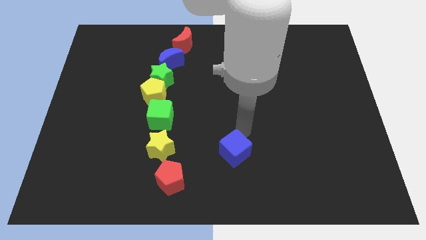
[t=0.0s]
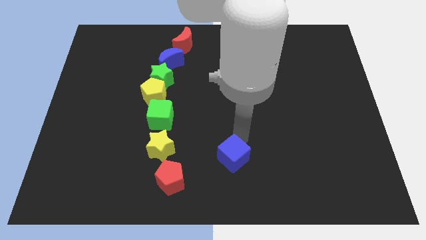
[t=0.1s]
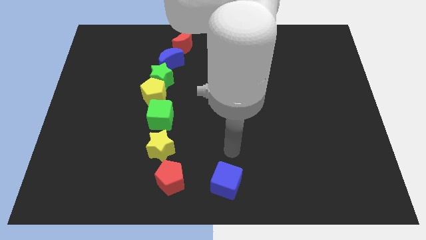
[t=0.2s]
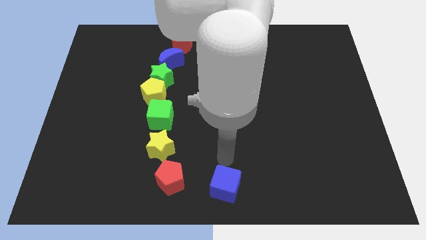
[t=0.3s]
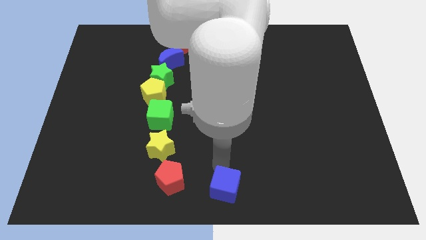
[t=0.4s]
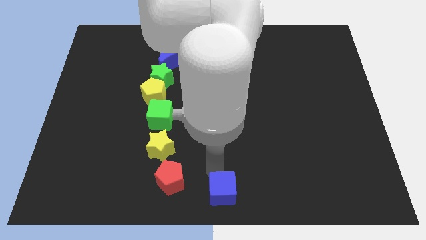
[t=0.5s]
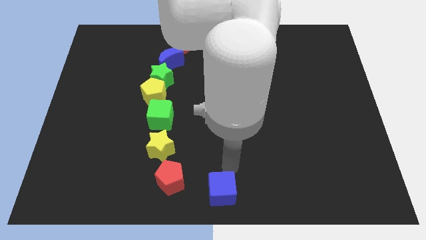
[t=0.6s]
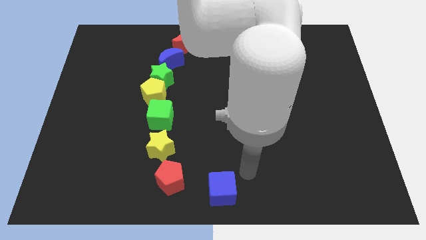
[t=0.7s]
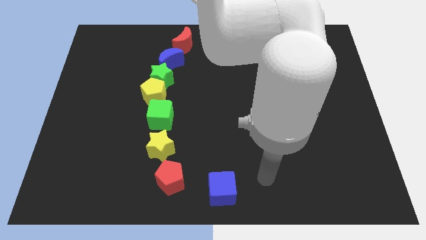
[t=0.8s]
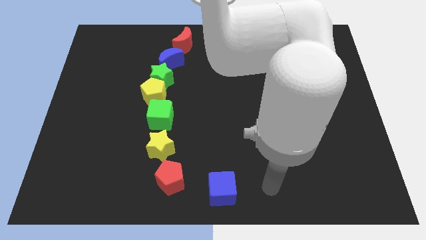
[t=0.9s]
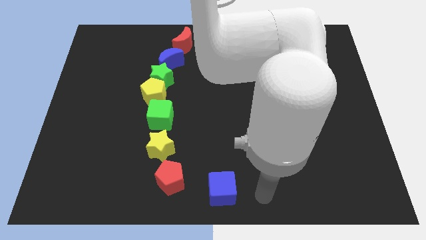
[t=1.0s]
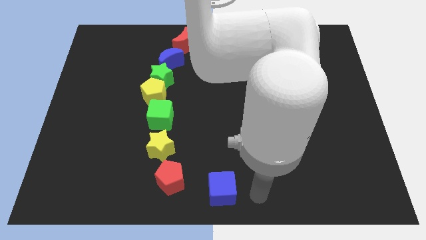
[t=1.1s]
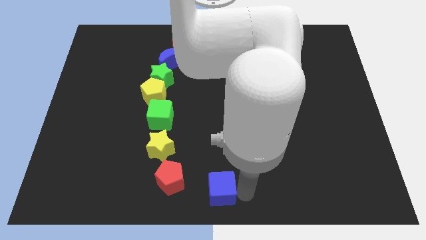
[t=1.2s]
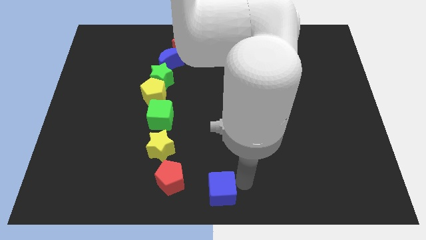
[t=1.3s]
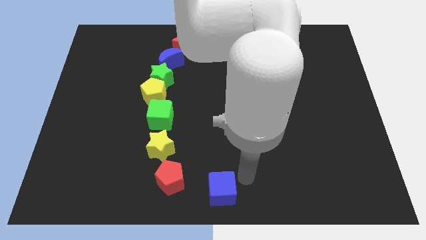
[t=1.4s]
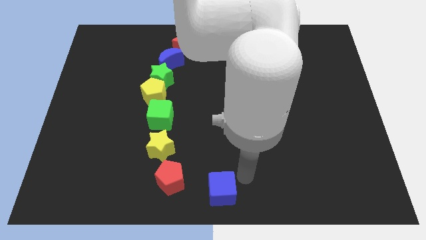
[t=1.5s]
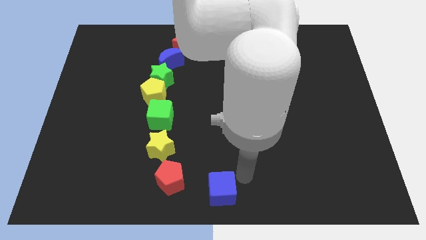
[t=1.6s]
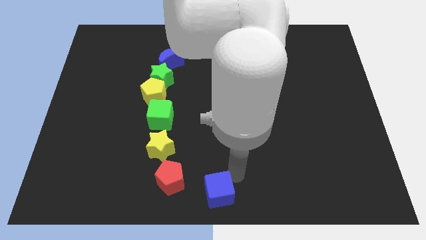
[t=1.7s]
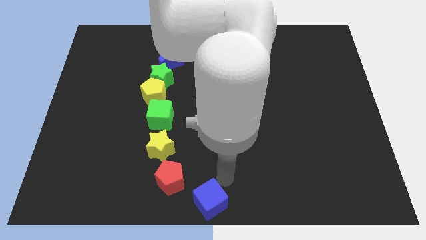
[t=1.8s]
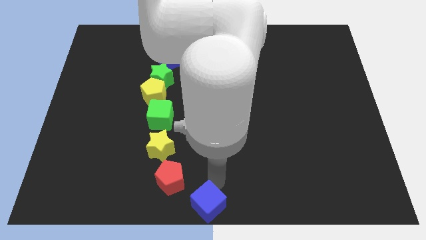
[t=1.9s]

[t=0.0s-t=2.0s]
move the blue cube towards the vertical line

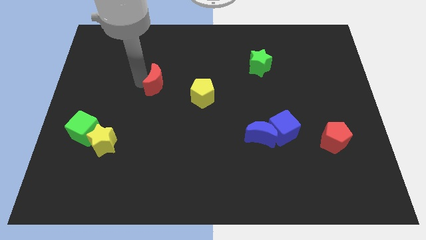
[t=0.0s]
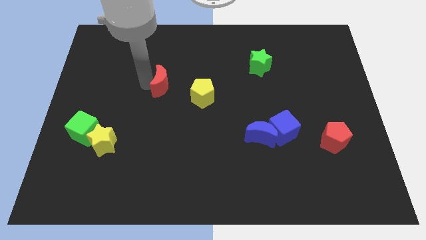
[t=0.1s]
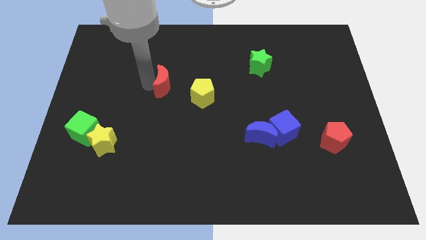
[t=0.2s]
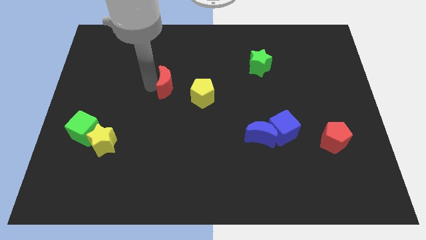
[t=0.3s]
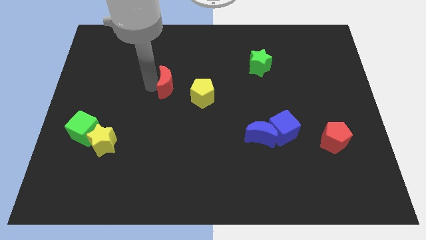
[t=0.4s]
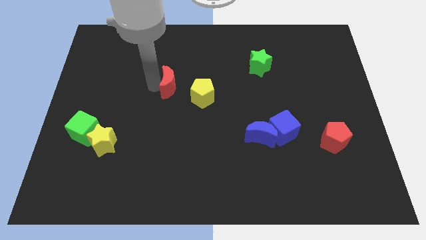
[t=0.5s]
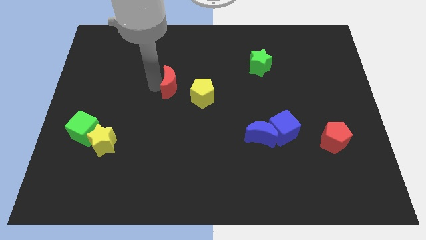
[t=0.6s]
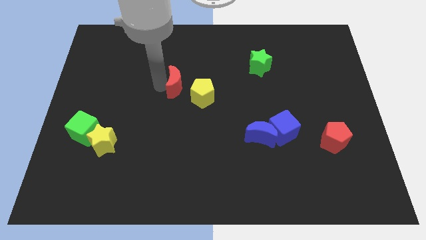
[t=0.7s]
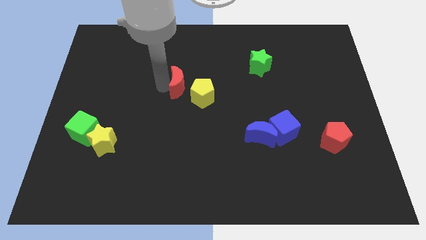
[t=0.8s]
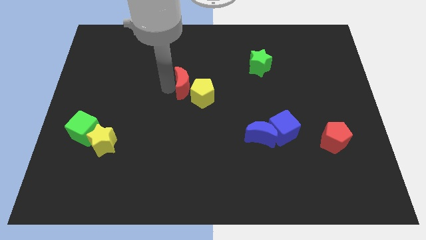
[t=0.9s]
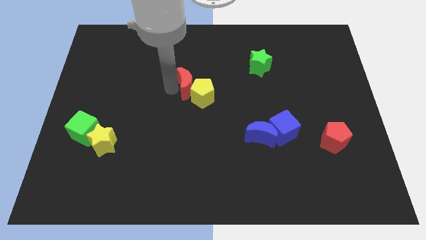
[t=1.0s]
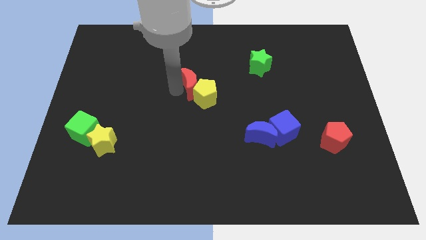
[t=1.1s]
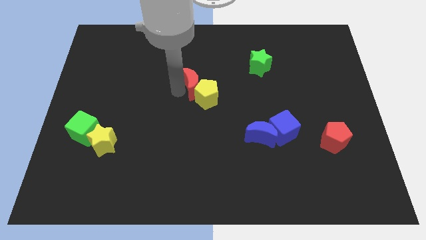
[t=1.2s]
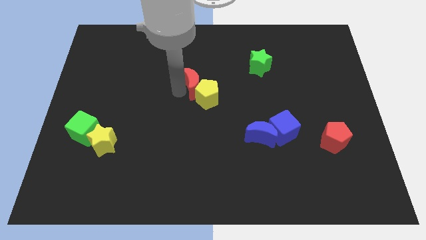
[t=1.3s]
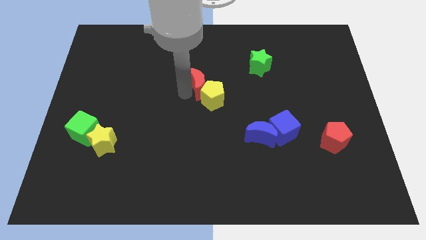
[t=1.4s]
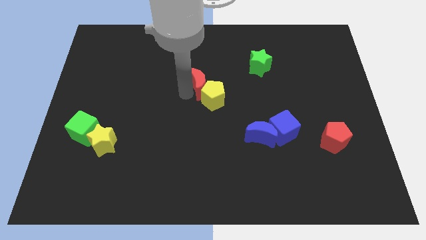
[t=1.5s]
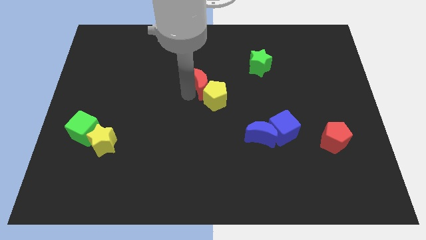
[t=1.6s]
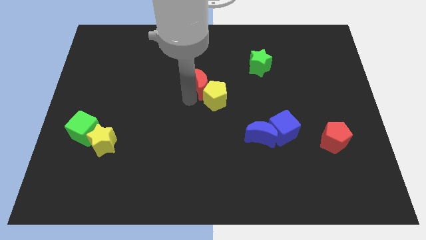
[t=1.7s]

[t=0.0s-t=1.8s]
push the red crescent into the yellow pentagon

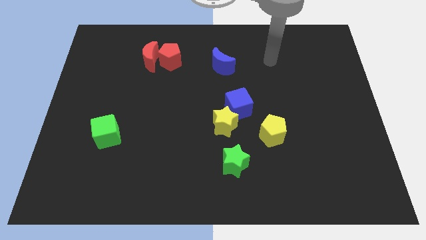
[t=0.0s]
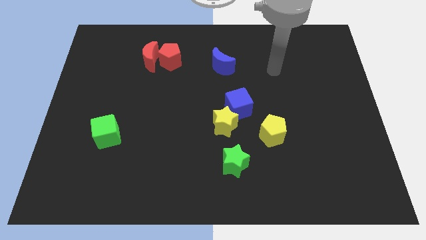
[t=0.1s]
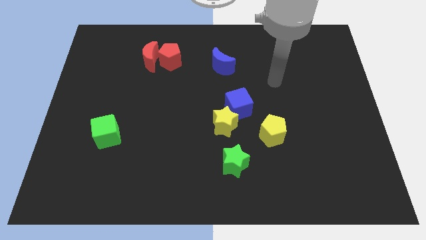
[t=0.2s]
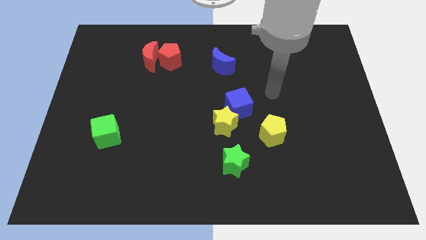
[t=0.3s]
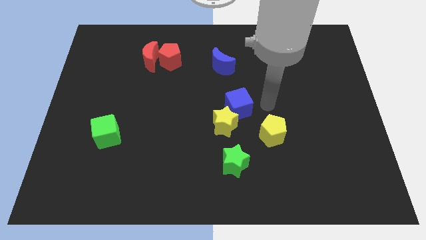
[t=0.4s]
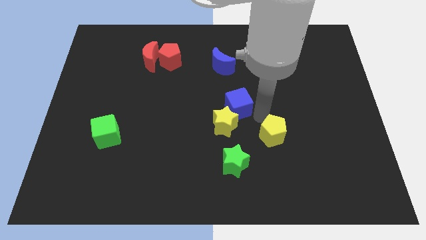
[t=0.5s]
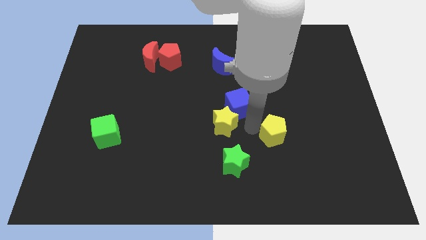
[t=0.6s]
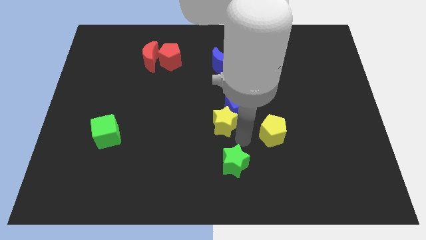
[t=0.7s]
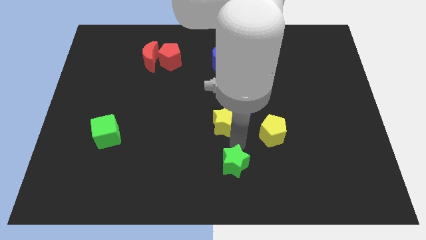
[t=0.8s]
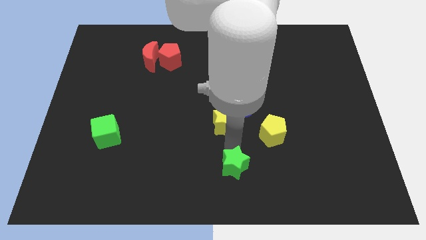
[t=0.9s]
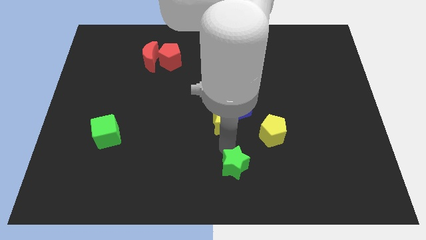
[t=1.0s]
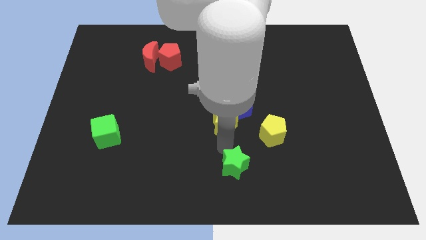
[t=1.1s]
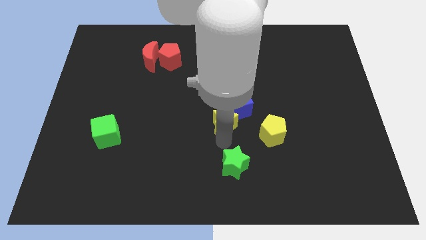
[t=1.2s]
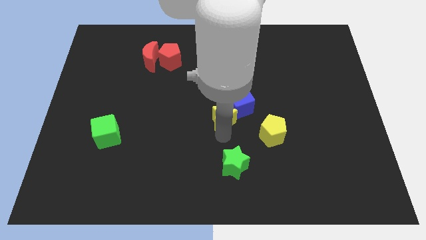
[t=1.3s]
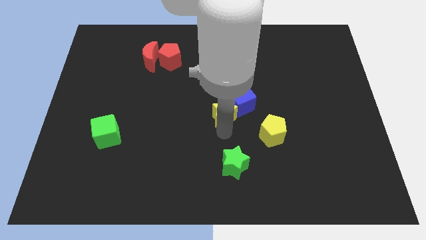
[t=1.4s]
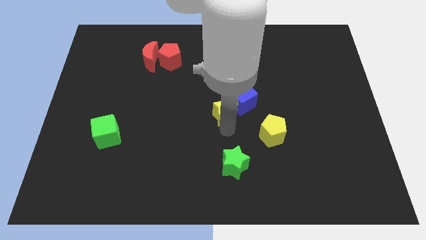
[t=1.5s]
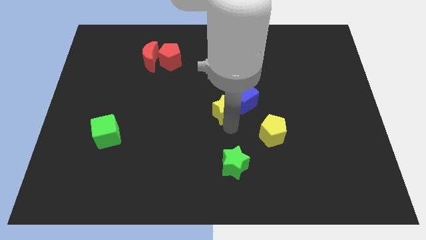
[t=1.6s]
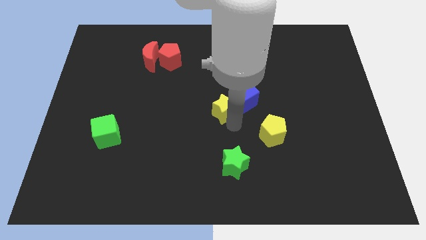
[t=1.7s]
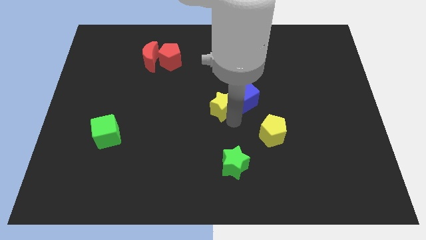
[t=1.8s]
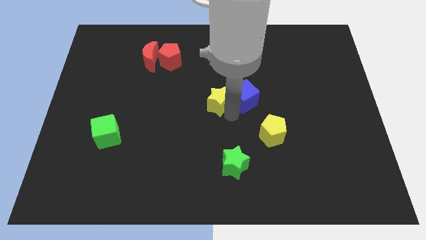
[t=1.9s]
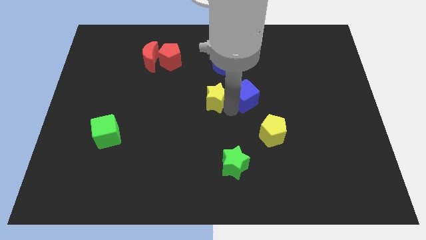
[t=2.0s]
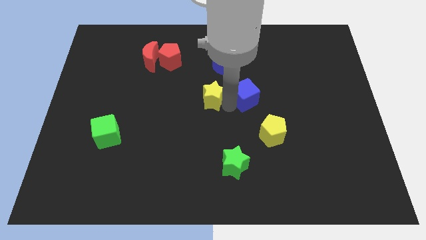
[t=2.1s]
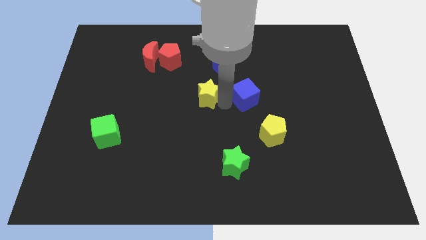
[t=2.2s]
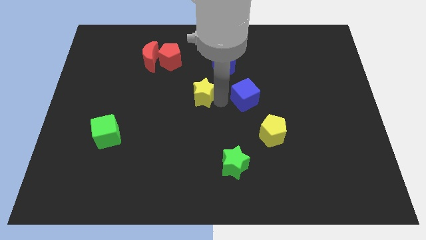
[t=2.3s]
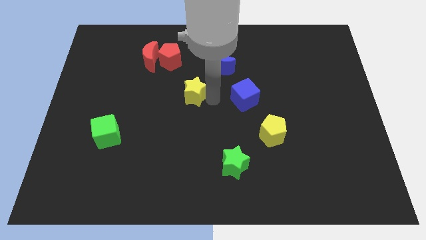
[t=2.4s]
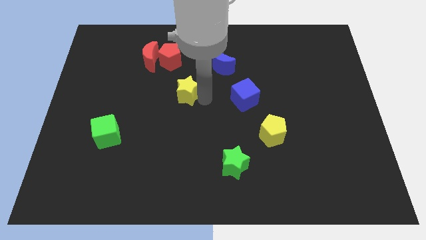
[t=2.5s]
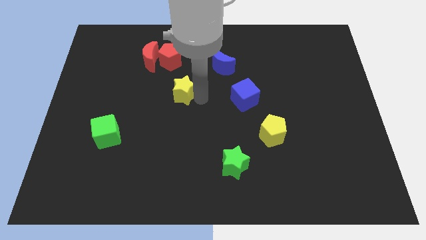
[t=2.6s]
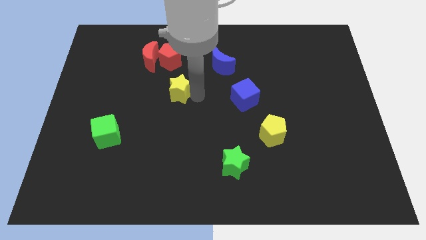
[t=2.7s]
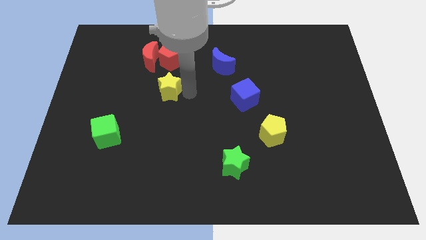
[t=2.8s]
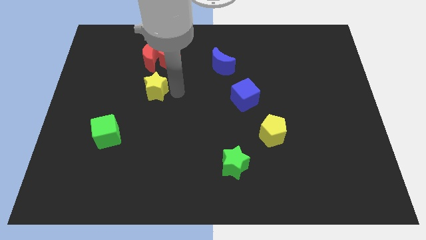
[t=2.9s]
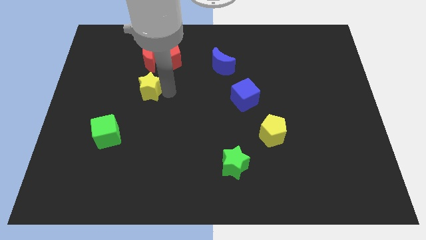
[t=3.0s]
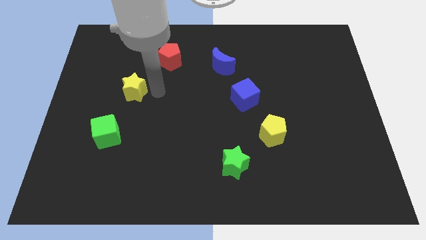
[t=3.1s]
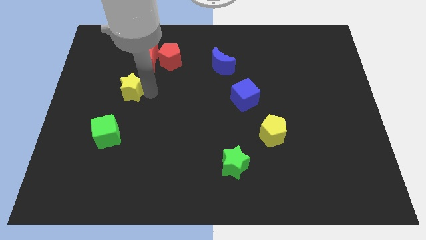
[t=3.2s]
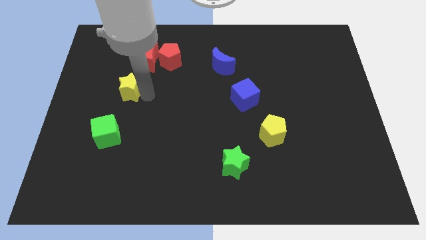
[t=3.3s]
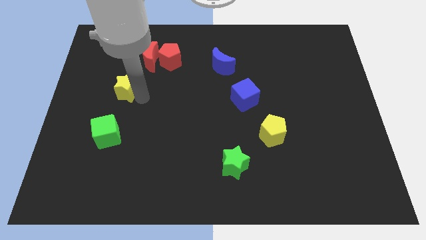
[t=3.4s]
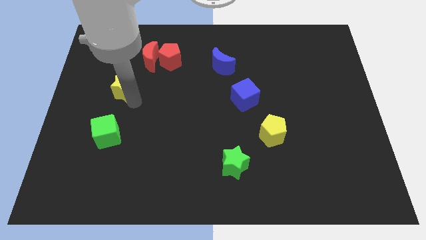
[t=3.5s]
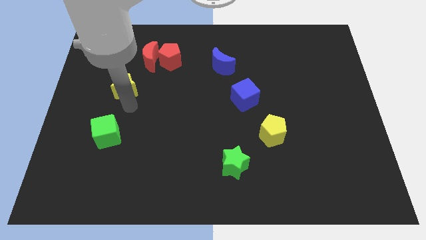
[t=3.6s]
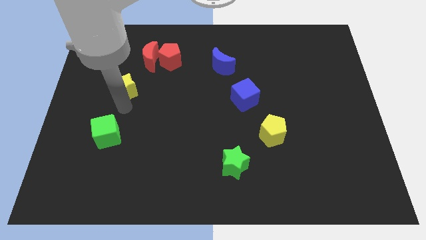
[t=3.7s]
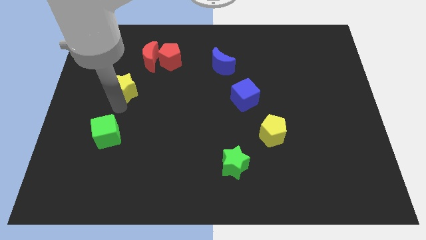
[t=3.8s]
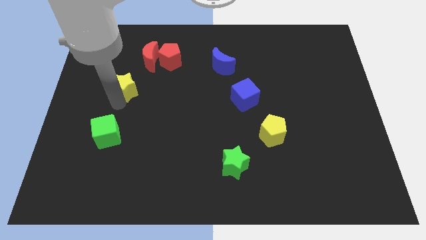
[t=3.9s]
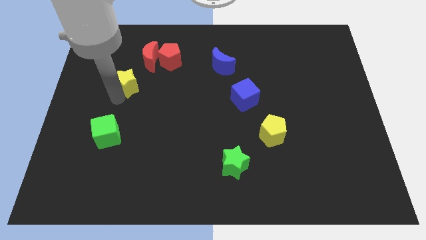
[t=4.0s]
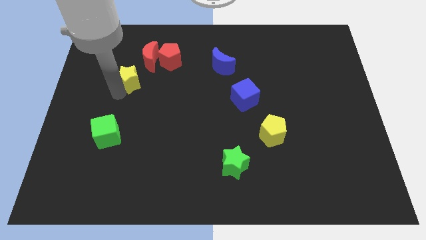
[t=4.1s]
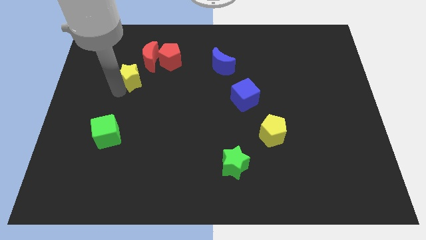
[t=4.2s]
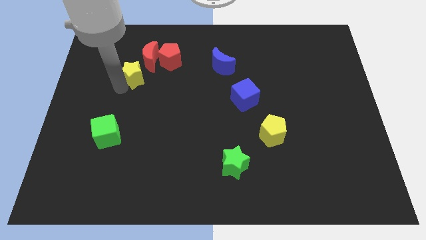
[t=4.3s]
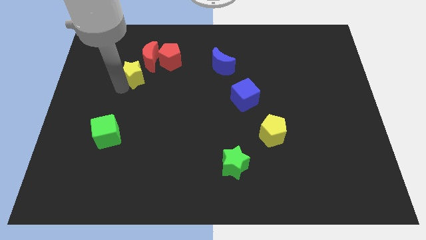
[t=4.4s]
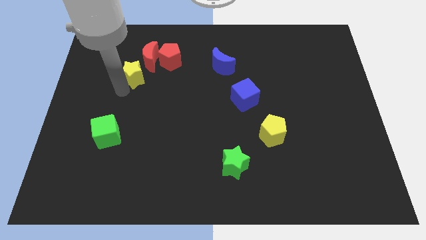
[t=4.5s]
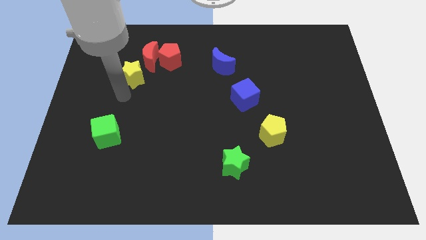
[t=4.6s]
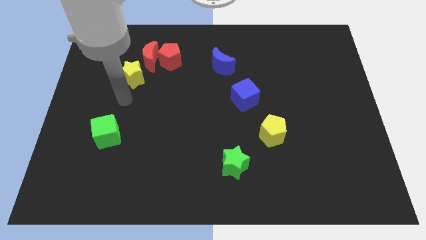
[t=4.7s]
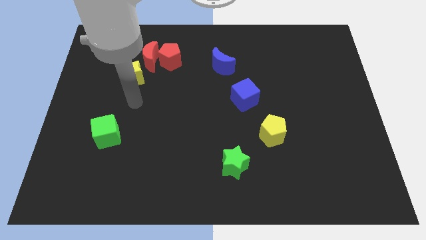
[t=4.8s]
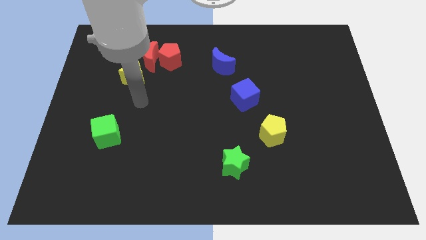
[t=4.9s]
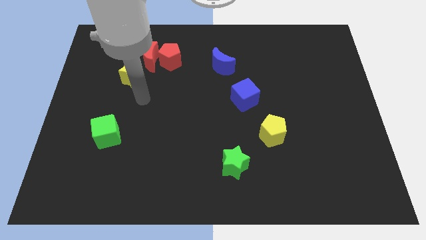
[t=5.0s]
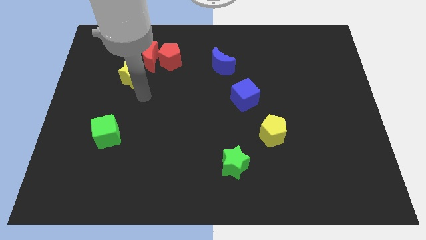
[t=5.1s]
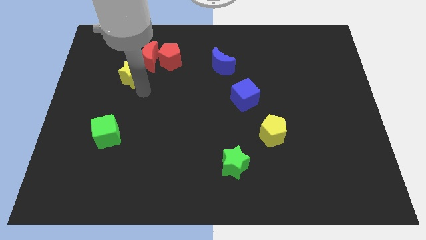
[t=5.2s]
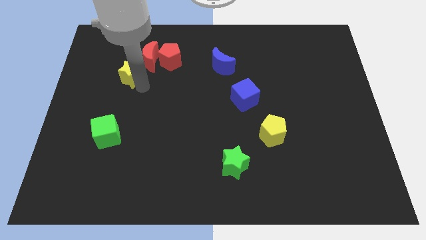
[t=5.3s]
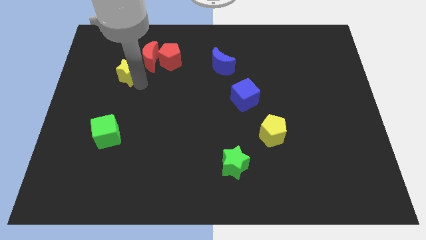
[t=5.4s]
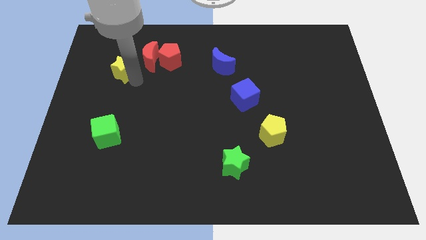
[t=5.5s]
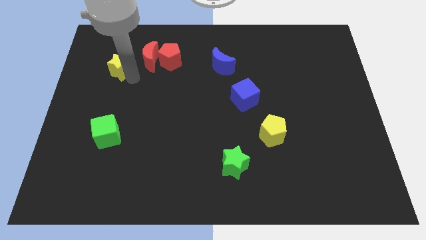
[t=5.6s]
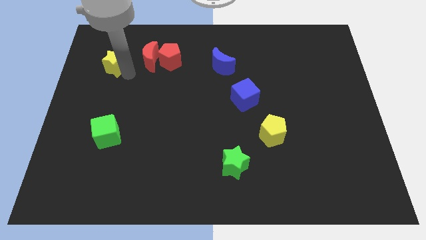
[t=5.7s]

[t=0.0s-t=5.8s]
place yellow star parallel to red moon
